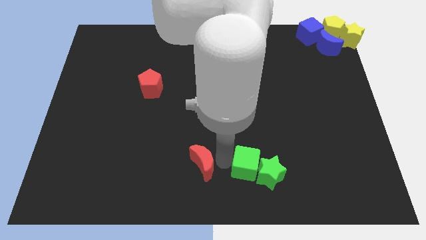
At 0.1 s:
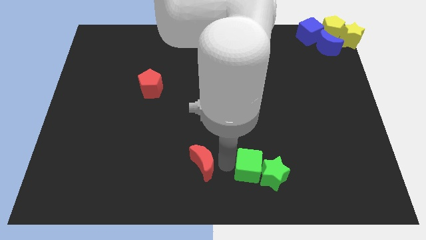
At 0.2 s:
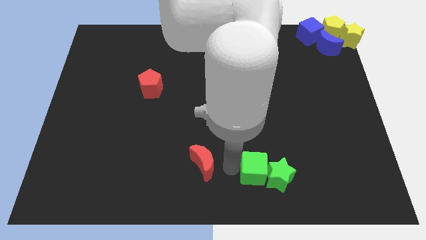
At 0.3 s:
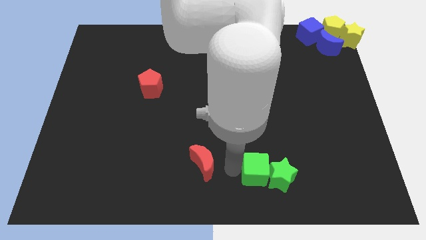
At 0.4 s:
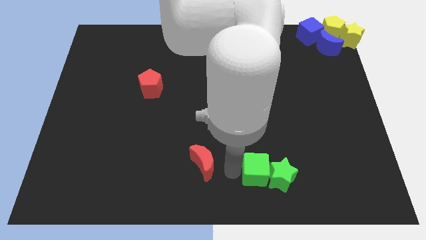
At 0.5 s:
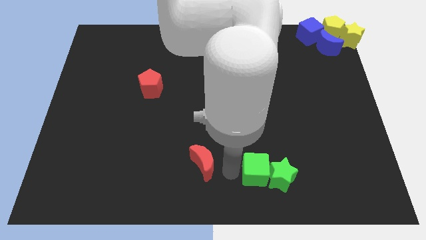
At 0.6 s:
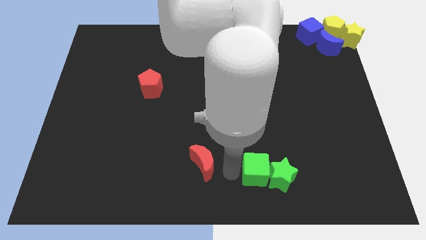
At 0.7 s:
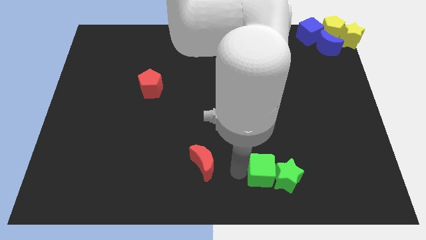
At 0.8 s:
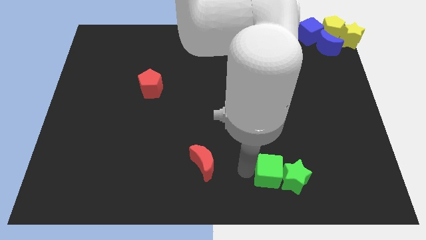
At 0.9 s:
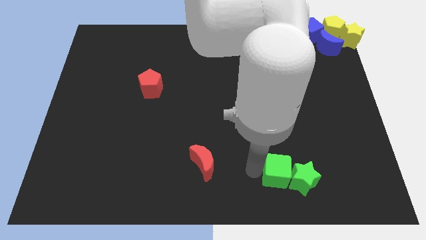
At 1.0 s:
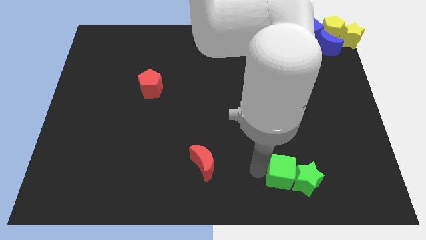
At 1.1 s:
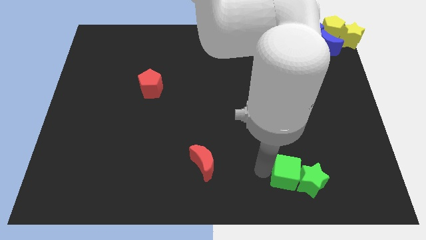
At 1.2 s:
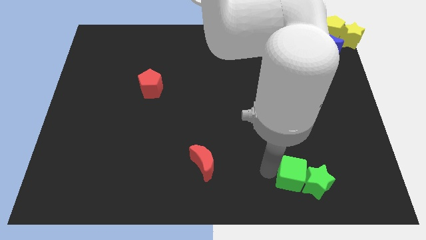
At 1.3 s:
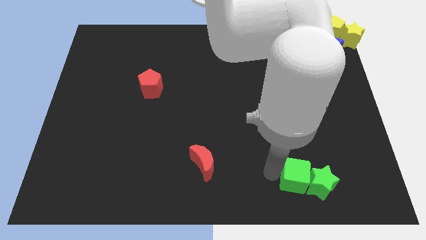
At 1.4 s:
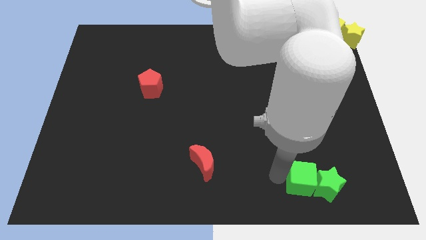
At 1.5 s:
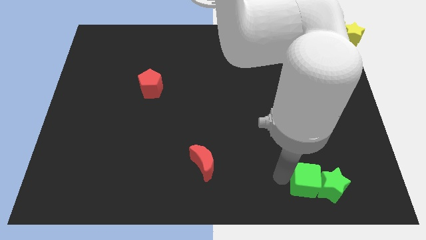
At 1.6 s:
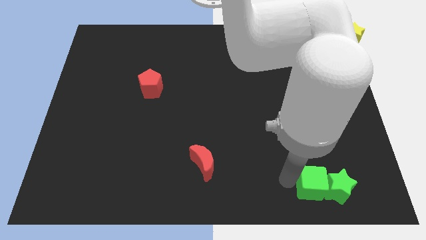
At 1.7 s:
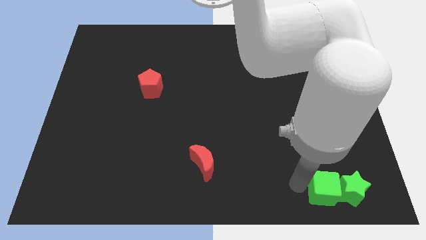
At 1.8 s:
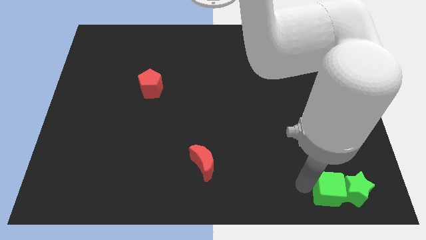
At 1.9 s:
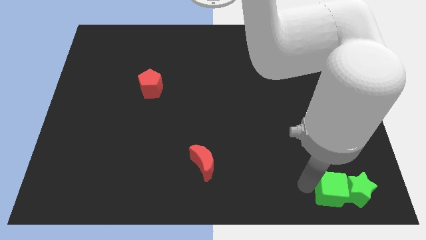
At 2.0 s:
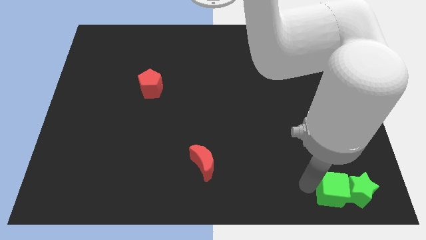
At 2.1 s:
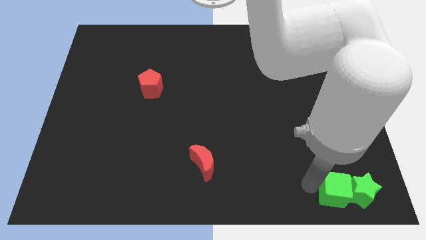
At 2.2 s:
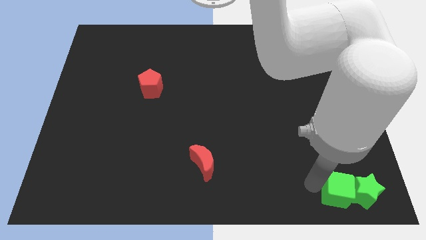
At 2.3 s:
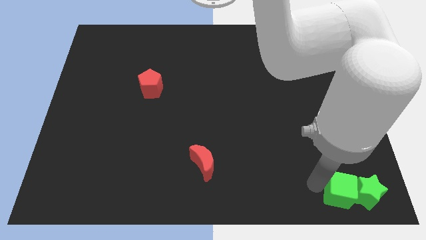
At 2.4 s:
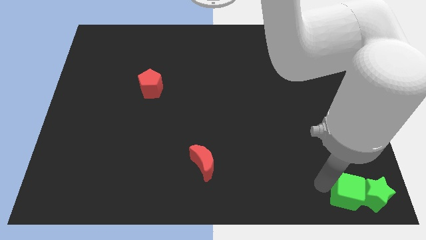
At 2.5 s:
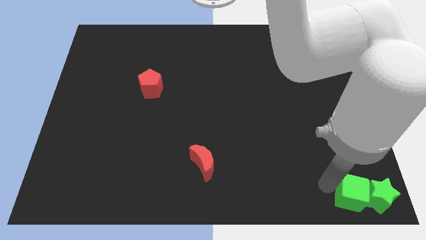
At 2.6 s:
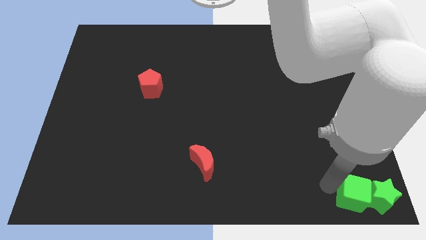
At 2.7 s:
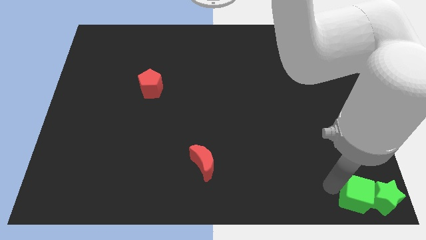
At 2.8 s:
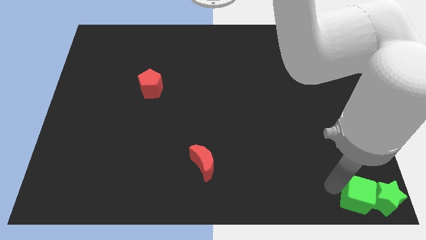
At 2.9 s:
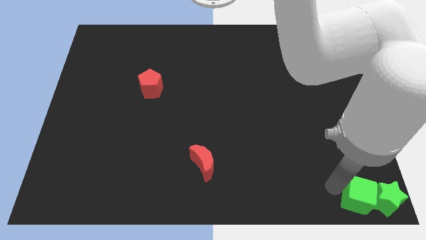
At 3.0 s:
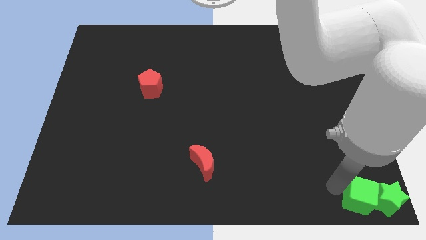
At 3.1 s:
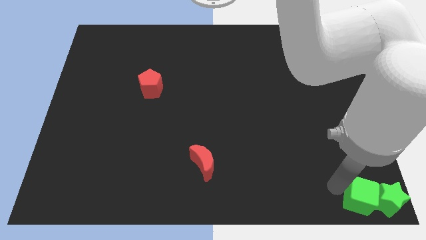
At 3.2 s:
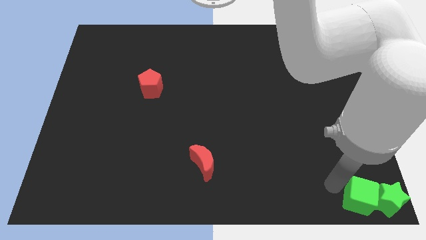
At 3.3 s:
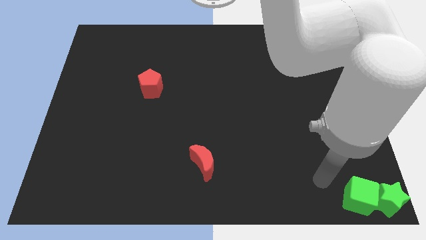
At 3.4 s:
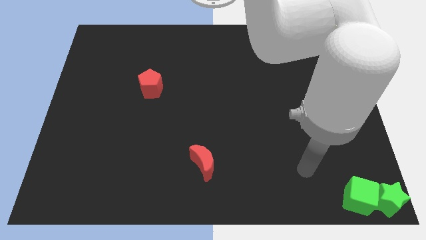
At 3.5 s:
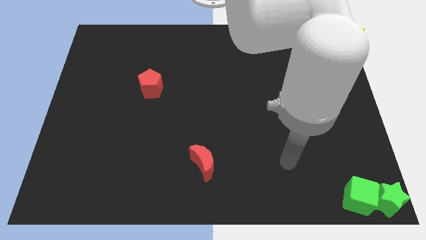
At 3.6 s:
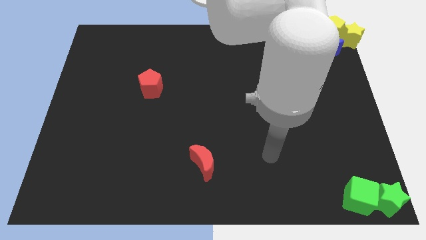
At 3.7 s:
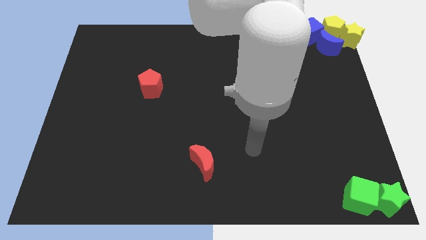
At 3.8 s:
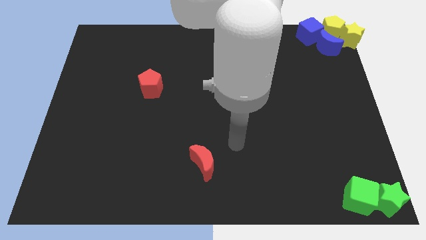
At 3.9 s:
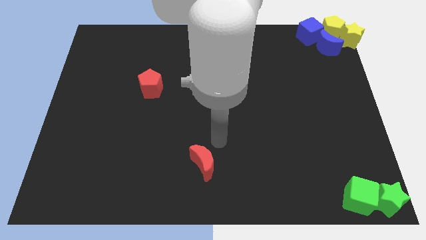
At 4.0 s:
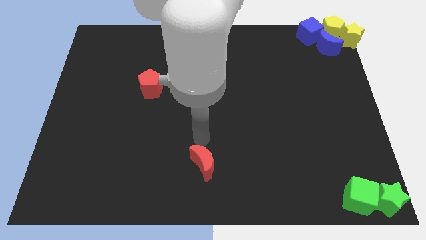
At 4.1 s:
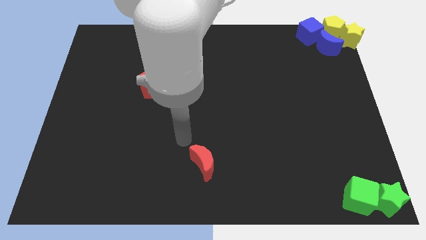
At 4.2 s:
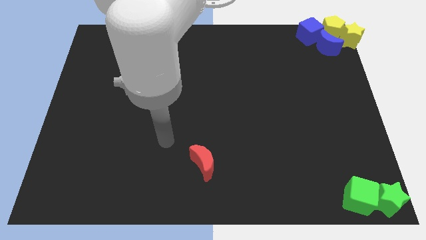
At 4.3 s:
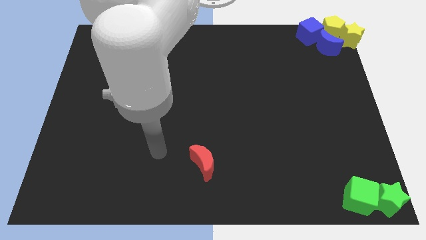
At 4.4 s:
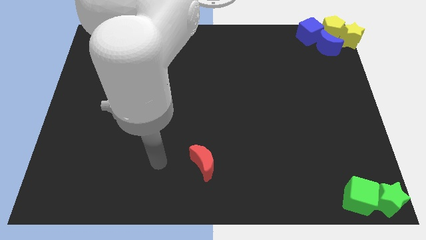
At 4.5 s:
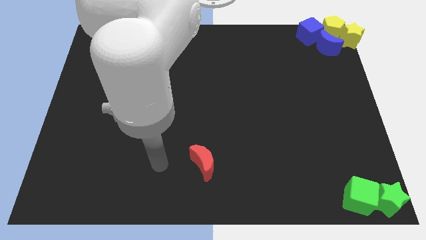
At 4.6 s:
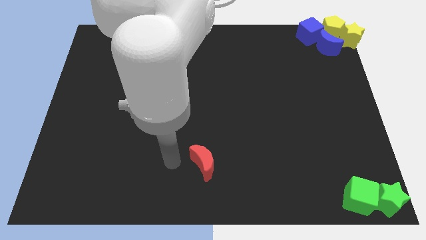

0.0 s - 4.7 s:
push the green cubegreen star towards the bottom right corner of the board

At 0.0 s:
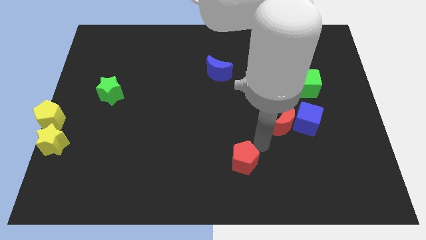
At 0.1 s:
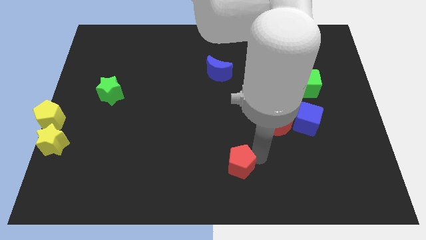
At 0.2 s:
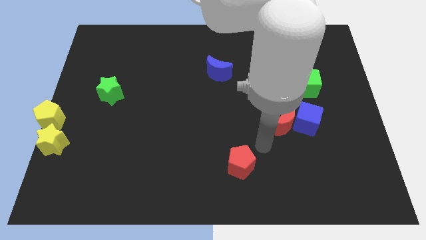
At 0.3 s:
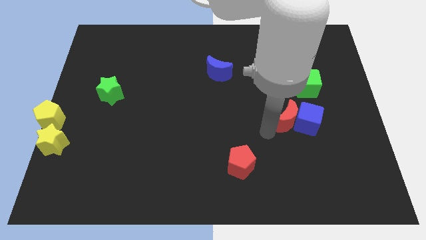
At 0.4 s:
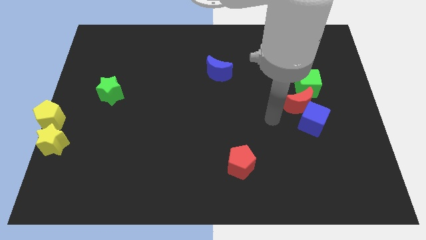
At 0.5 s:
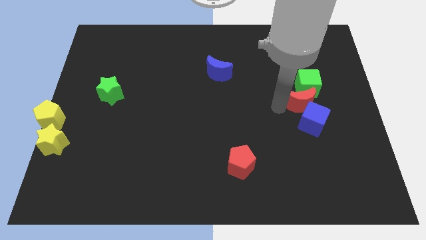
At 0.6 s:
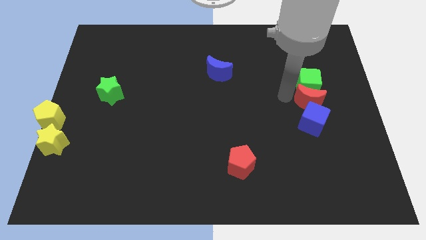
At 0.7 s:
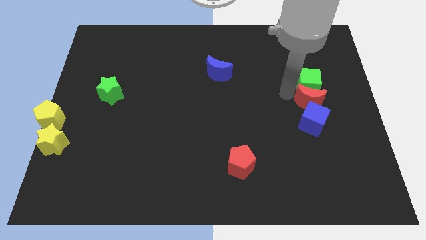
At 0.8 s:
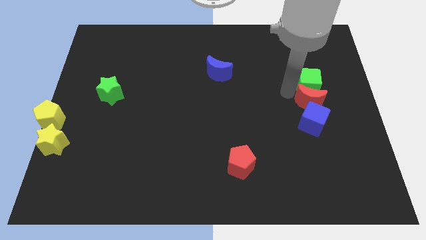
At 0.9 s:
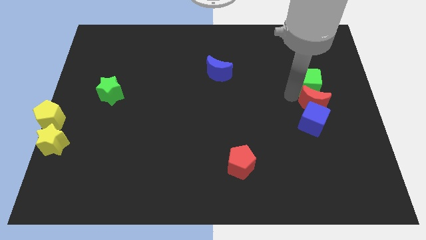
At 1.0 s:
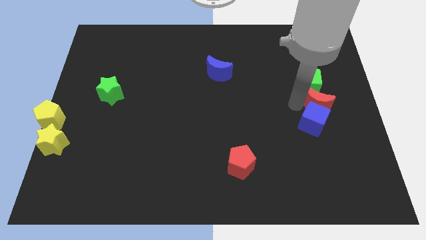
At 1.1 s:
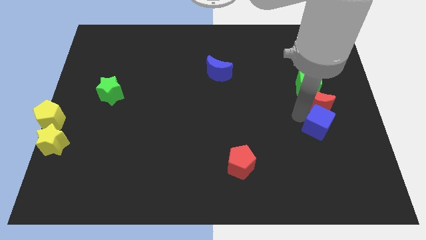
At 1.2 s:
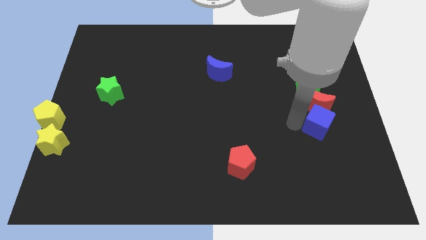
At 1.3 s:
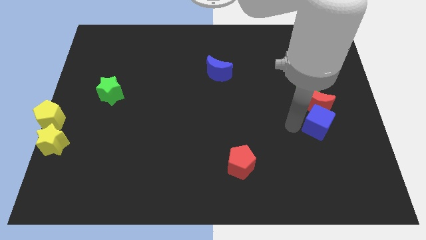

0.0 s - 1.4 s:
move red crescent in between the green cube and blue cube

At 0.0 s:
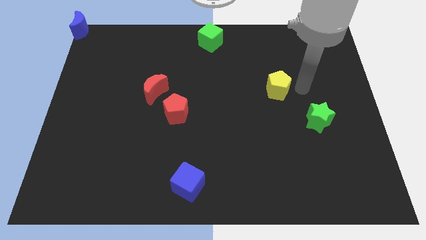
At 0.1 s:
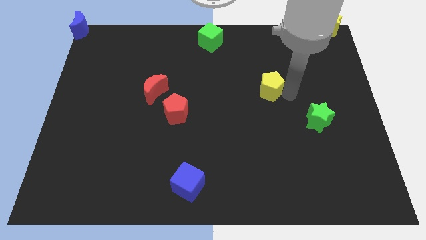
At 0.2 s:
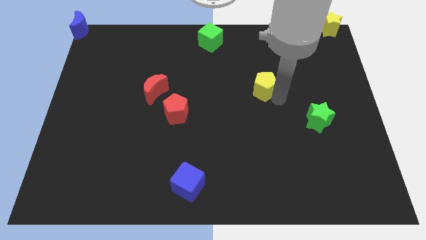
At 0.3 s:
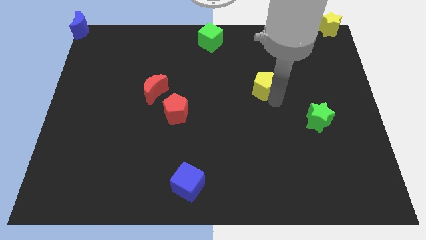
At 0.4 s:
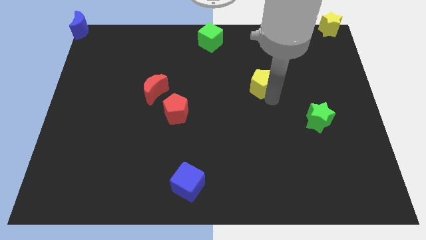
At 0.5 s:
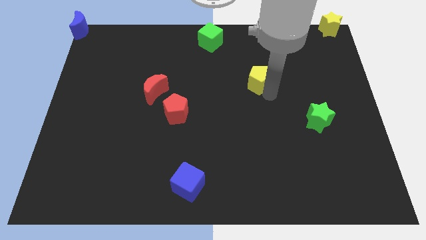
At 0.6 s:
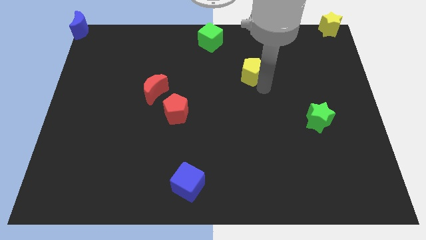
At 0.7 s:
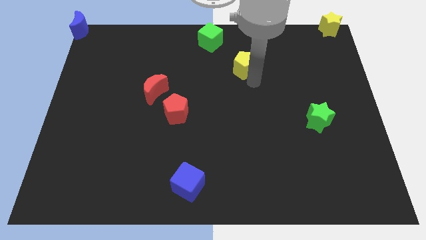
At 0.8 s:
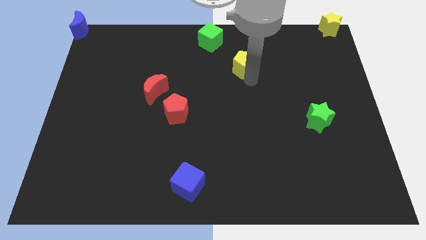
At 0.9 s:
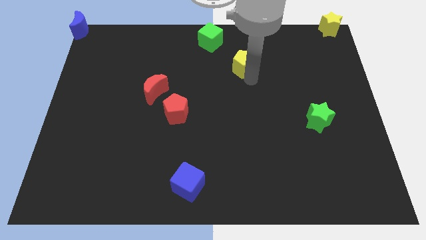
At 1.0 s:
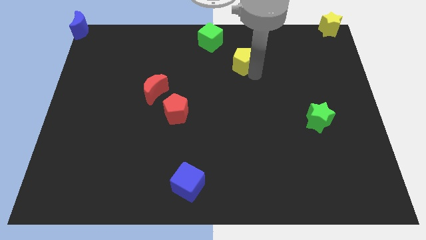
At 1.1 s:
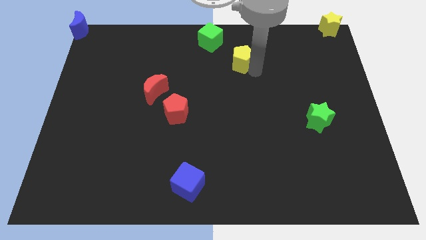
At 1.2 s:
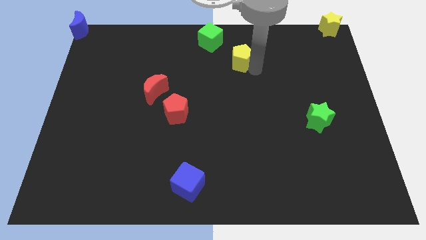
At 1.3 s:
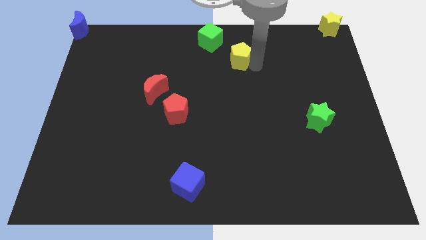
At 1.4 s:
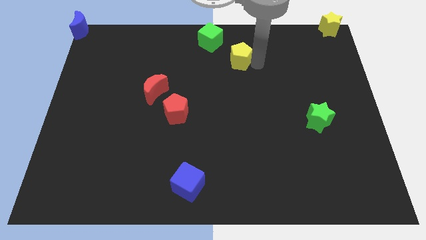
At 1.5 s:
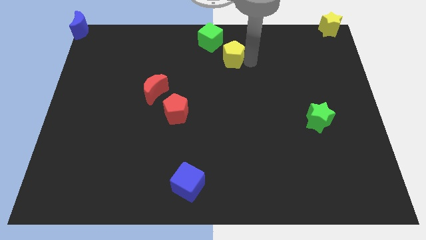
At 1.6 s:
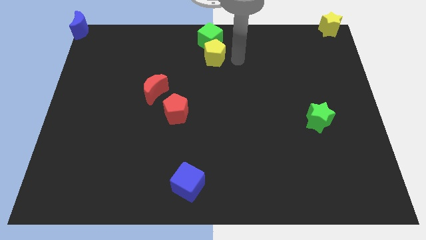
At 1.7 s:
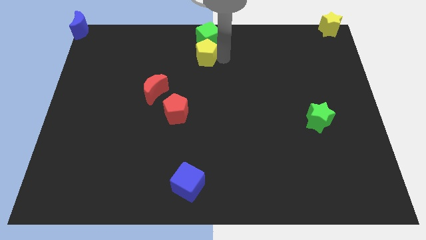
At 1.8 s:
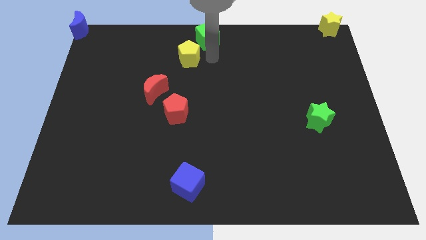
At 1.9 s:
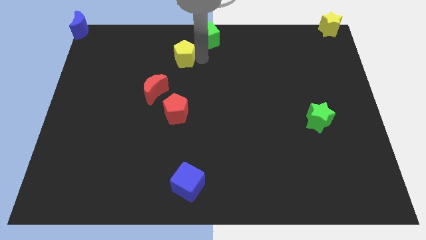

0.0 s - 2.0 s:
place yellow pentagon towards green cube

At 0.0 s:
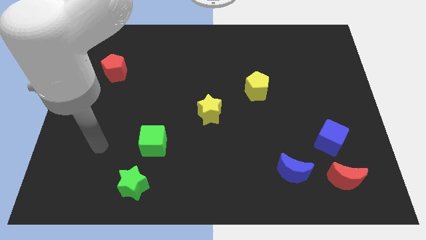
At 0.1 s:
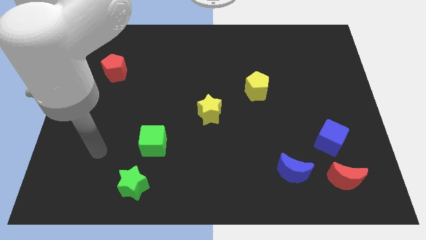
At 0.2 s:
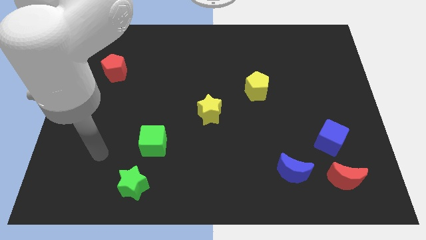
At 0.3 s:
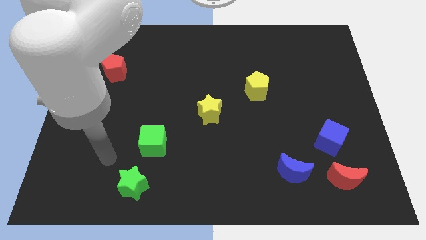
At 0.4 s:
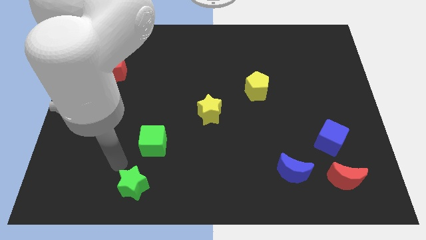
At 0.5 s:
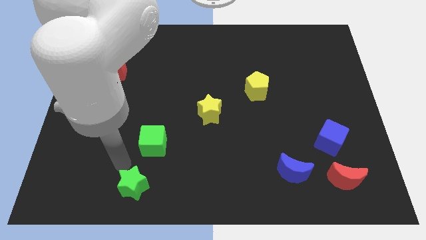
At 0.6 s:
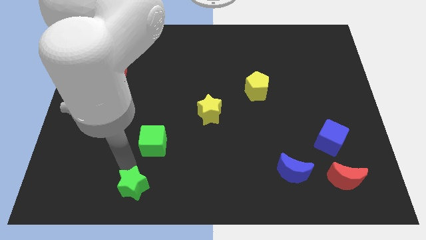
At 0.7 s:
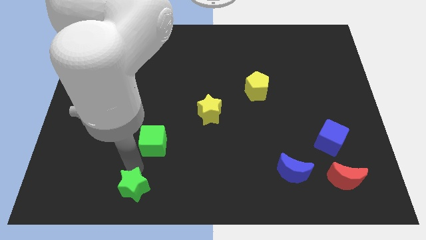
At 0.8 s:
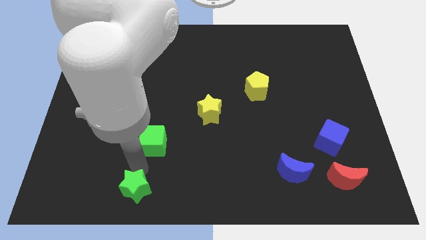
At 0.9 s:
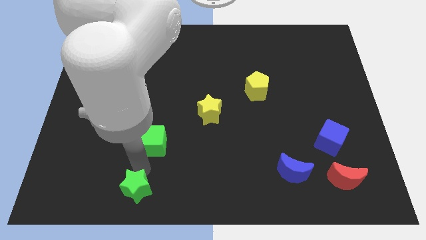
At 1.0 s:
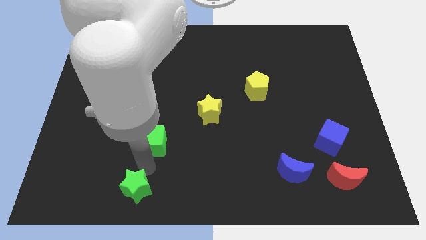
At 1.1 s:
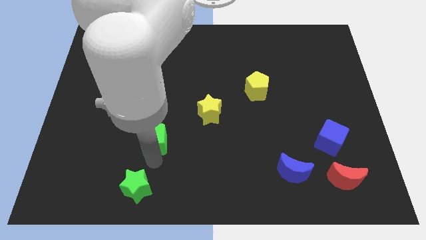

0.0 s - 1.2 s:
move your arm to the bottom side of the green cube
